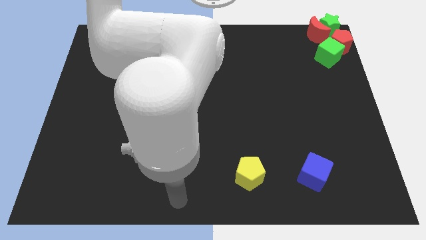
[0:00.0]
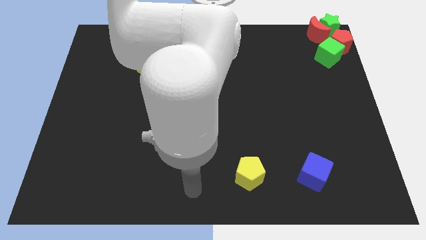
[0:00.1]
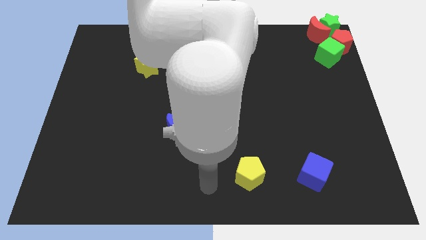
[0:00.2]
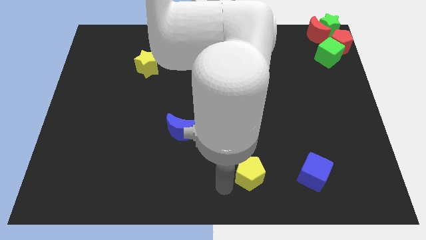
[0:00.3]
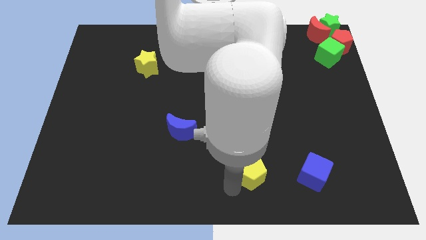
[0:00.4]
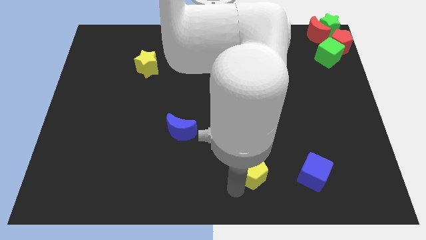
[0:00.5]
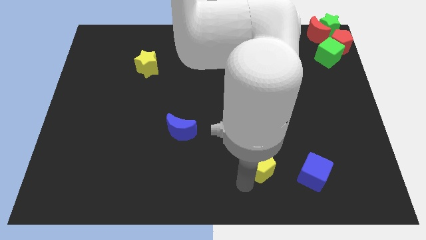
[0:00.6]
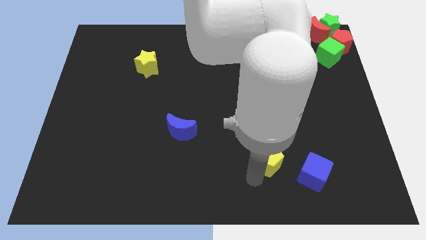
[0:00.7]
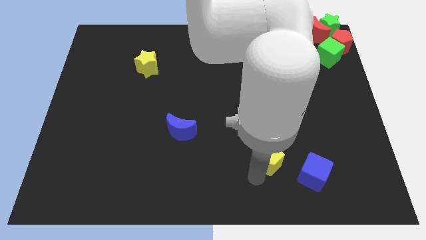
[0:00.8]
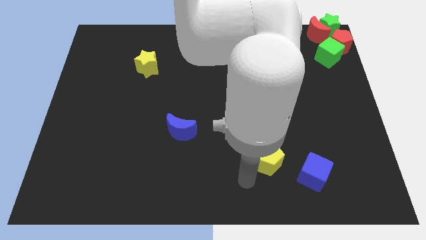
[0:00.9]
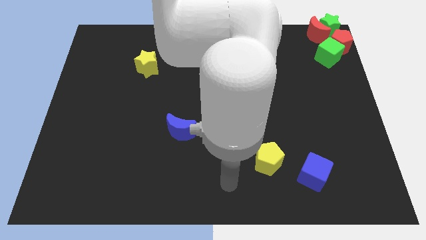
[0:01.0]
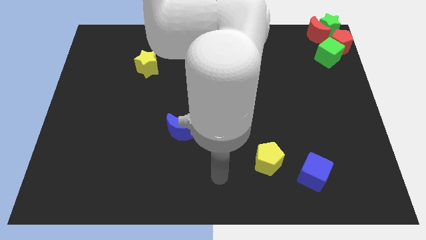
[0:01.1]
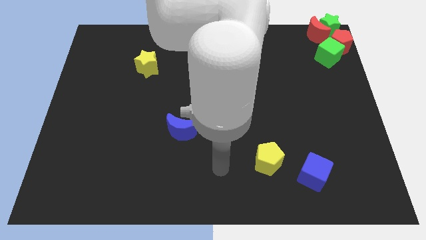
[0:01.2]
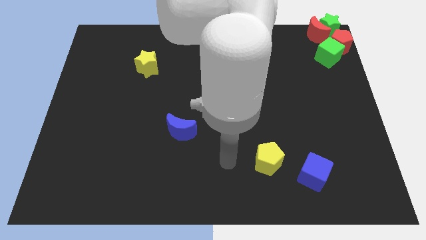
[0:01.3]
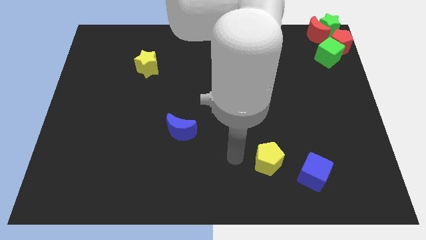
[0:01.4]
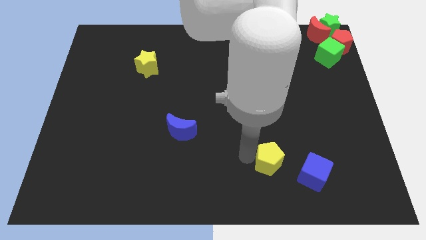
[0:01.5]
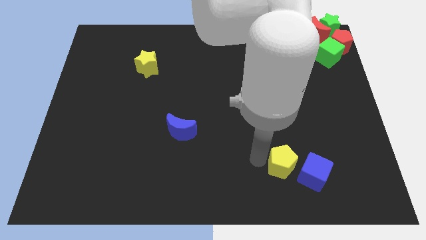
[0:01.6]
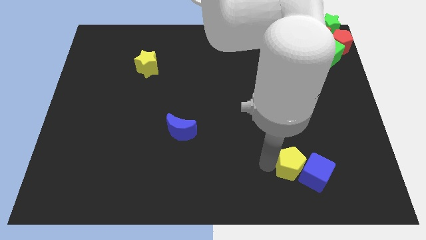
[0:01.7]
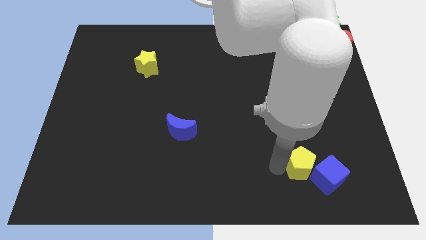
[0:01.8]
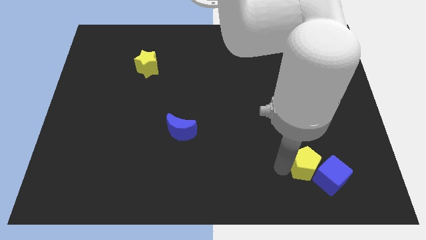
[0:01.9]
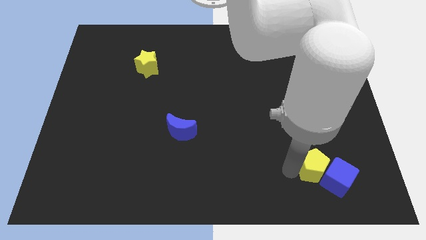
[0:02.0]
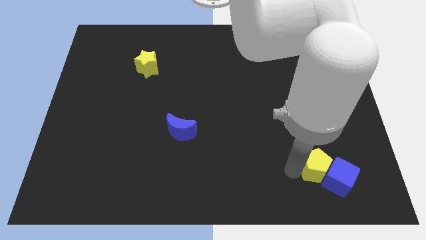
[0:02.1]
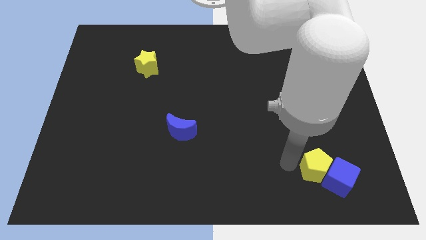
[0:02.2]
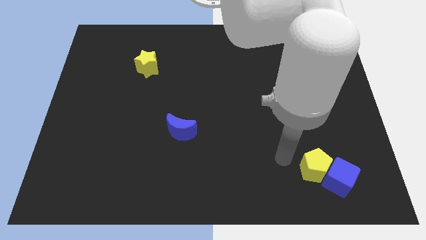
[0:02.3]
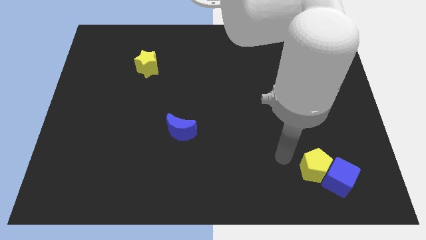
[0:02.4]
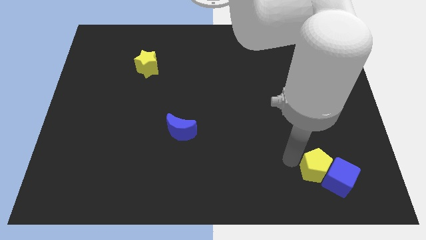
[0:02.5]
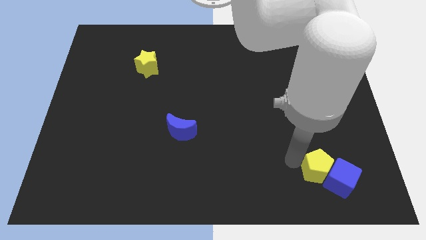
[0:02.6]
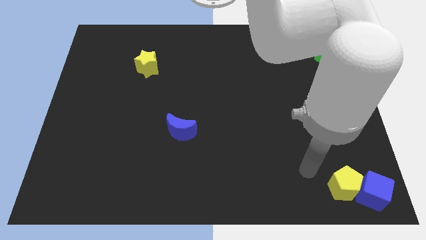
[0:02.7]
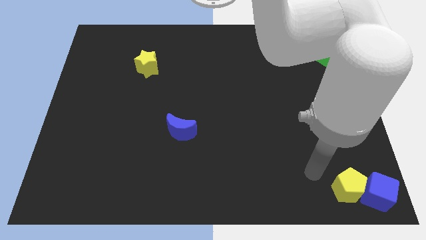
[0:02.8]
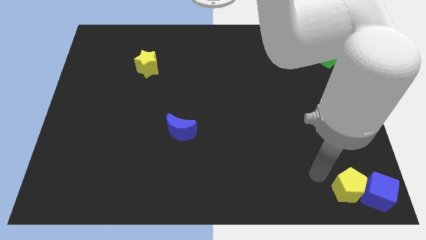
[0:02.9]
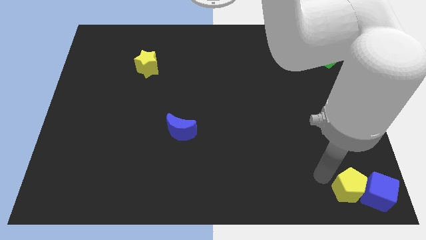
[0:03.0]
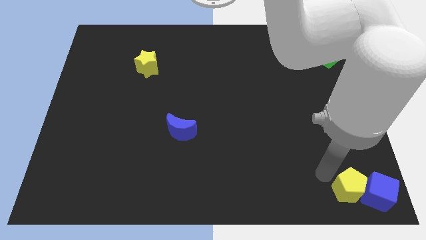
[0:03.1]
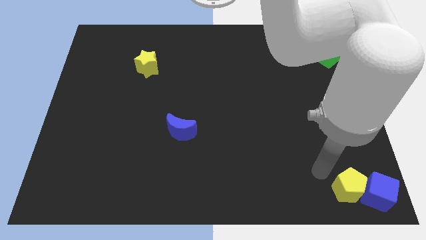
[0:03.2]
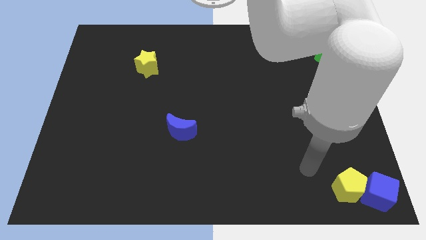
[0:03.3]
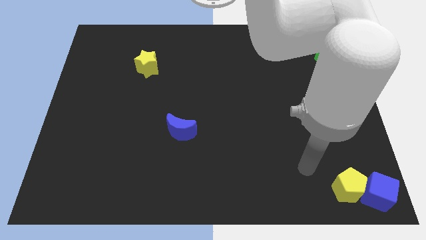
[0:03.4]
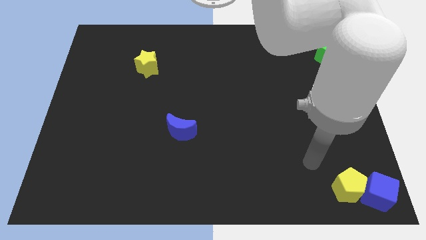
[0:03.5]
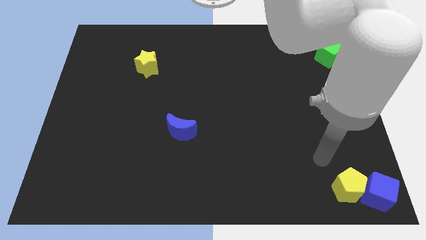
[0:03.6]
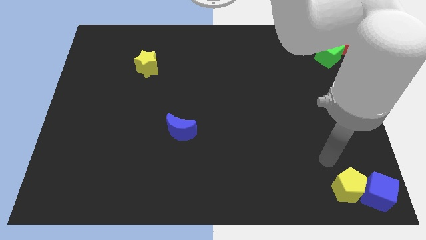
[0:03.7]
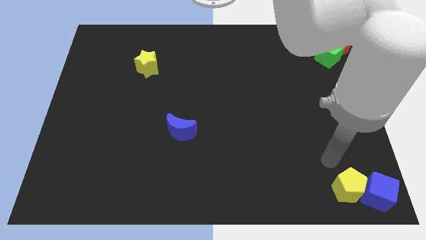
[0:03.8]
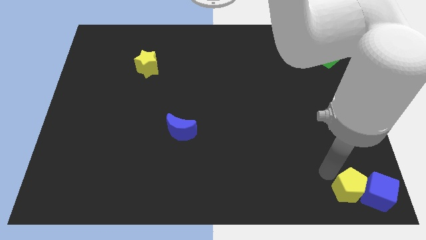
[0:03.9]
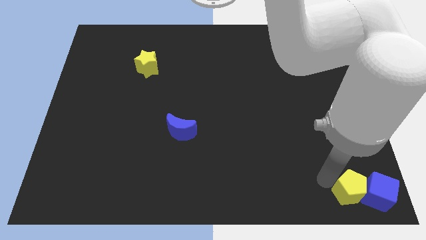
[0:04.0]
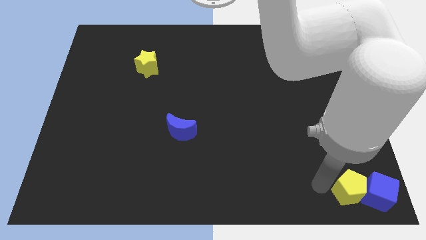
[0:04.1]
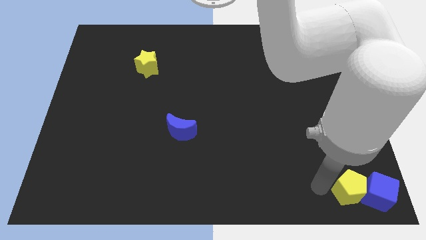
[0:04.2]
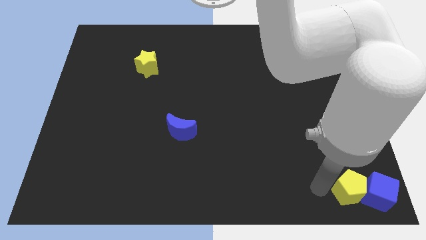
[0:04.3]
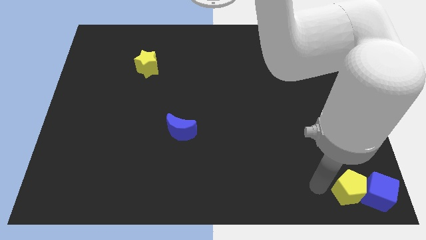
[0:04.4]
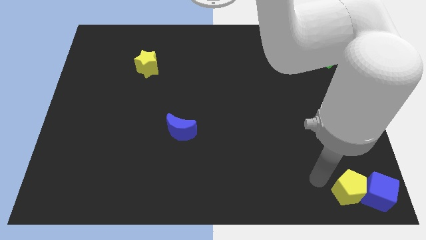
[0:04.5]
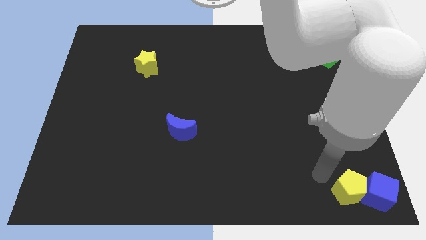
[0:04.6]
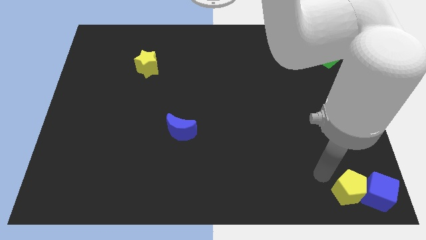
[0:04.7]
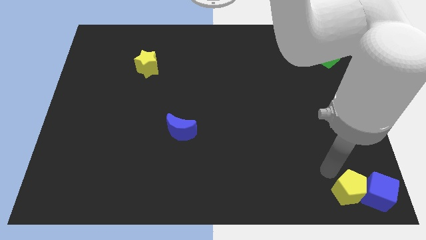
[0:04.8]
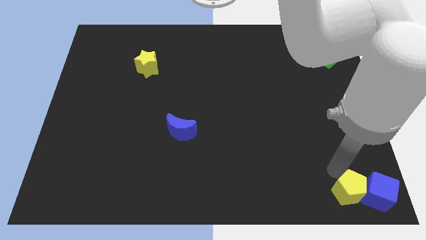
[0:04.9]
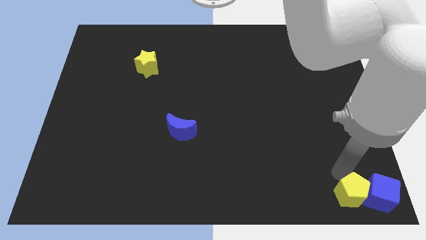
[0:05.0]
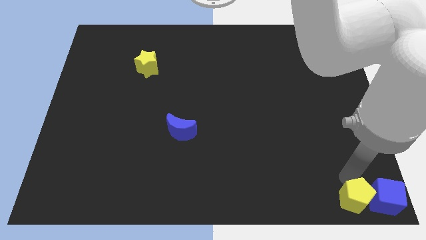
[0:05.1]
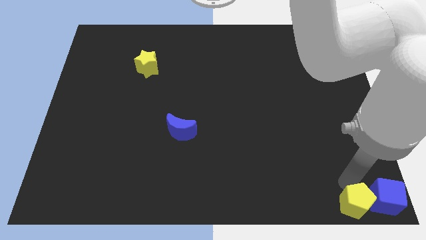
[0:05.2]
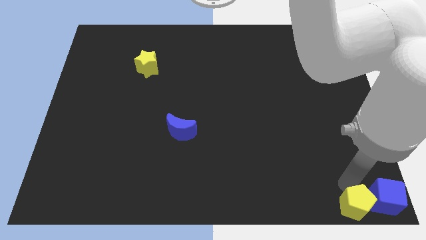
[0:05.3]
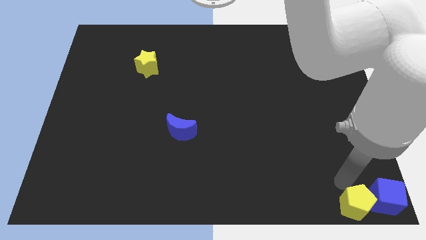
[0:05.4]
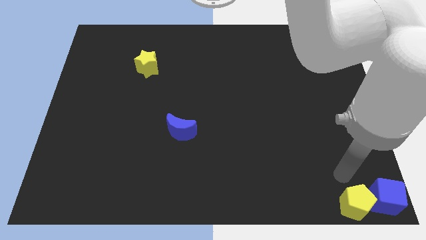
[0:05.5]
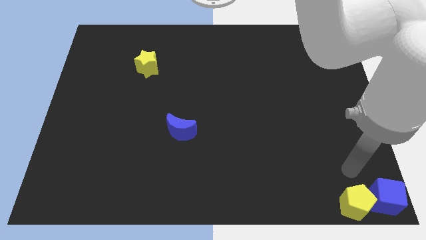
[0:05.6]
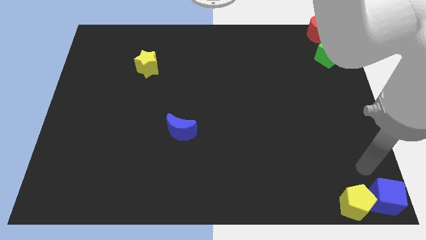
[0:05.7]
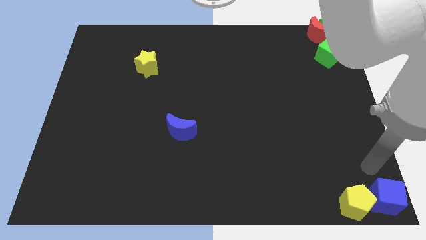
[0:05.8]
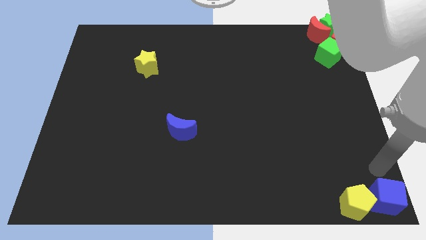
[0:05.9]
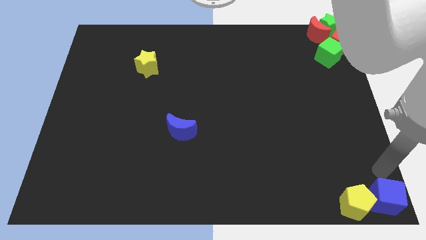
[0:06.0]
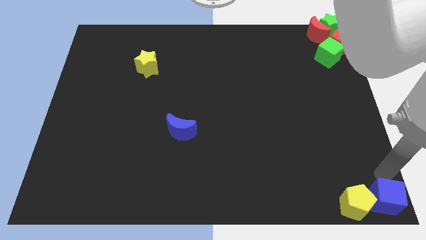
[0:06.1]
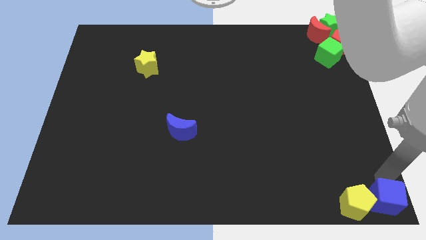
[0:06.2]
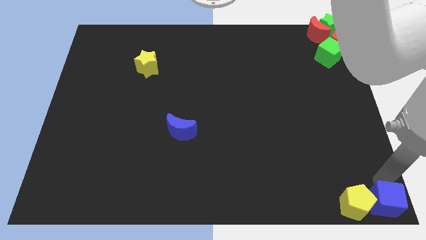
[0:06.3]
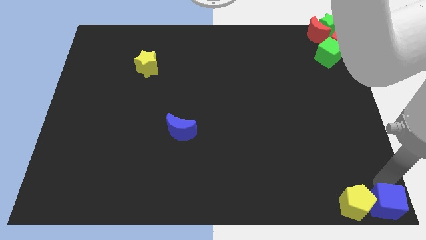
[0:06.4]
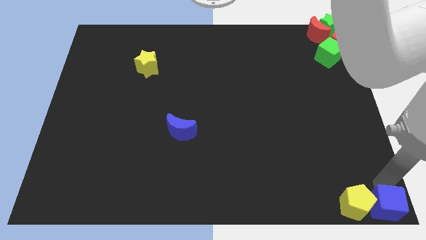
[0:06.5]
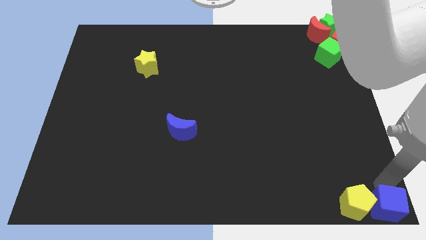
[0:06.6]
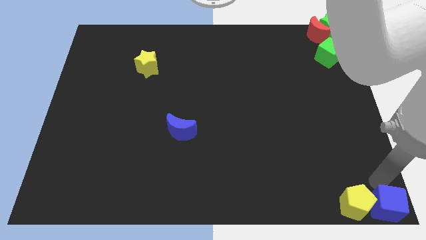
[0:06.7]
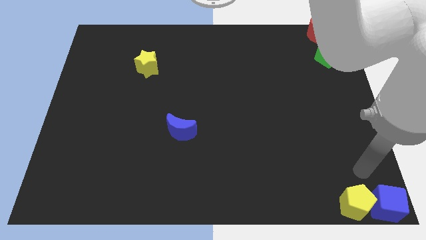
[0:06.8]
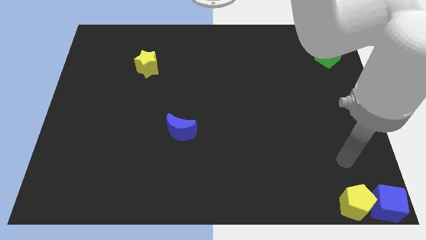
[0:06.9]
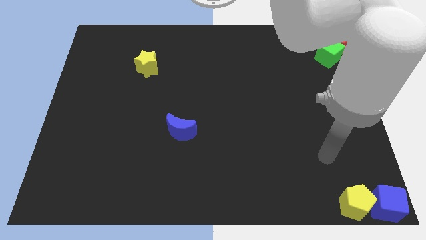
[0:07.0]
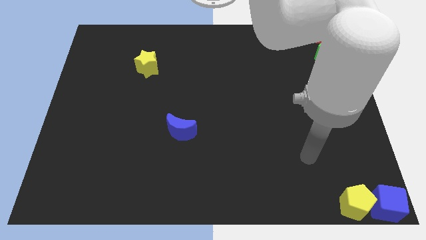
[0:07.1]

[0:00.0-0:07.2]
move the yellow pentagon and blue cube at the bottom right corner

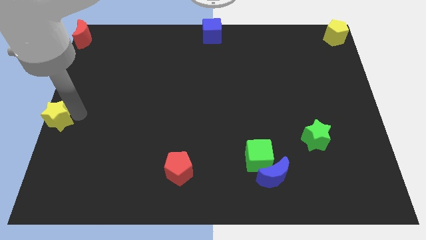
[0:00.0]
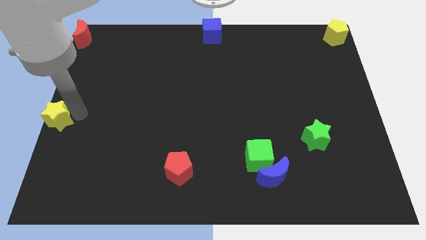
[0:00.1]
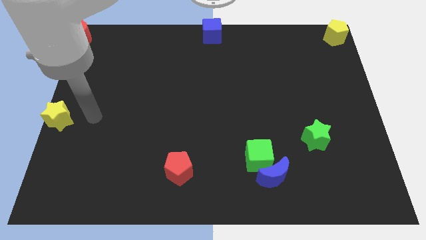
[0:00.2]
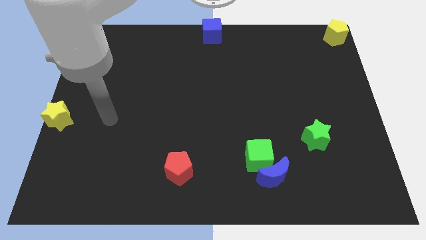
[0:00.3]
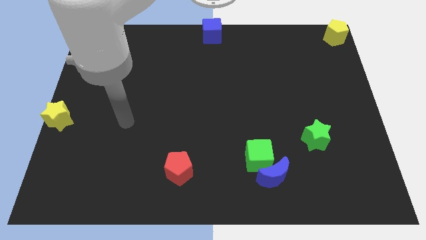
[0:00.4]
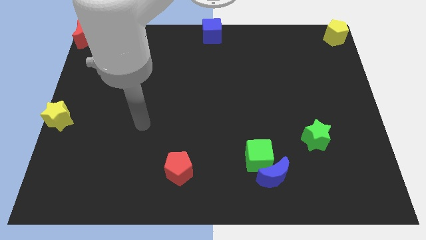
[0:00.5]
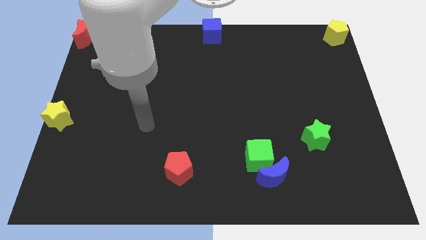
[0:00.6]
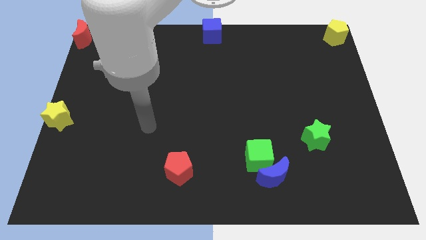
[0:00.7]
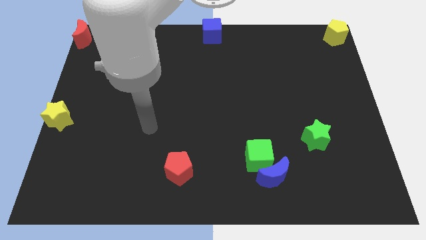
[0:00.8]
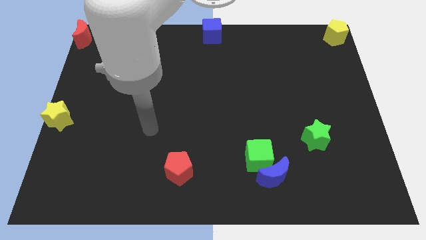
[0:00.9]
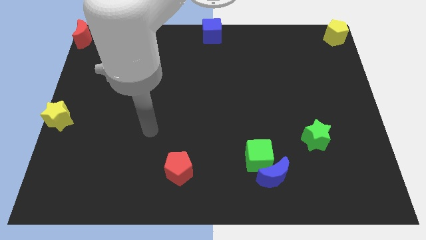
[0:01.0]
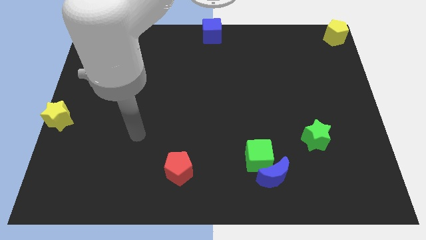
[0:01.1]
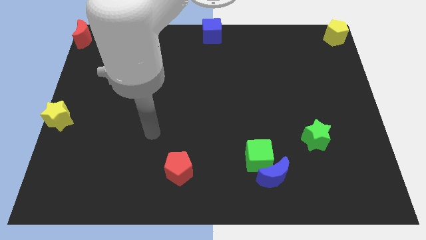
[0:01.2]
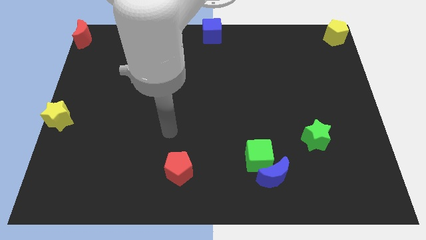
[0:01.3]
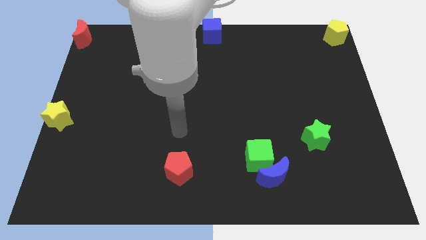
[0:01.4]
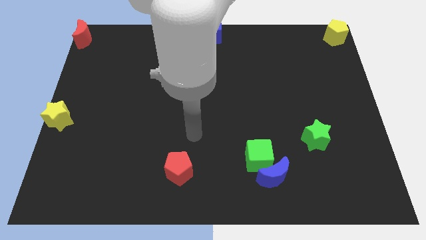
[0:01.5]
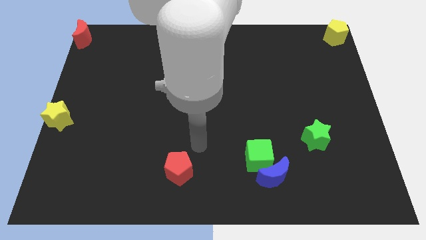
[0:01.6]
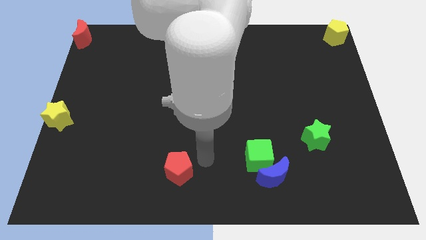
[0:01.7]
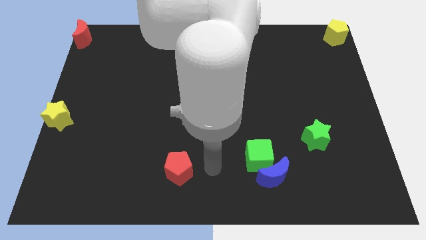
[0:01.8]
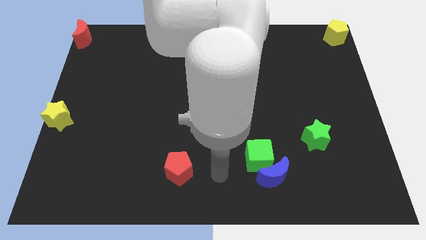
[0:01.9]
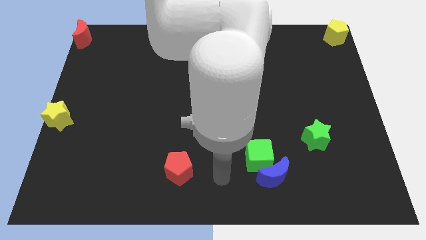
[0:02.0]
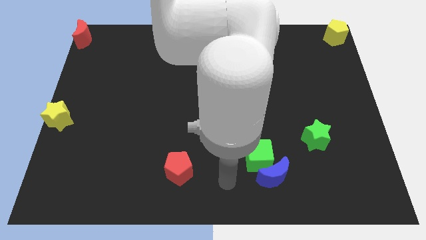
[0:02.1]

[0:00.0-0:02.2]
point your arm between red pentagon and green cube
